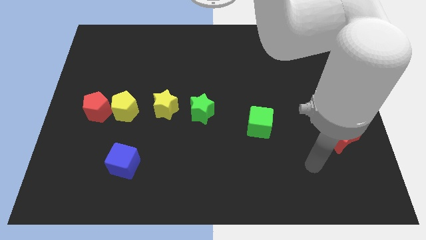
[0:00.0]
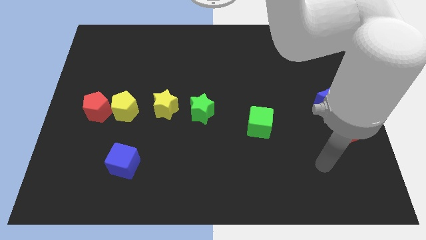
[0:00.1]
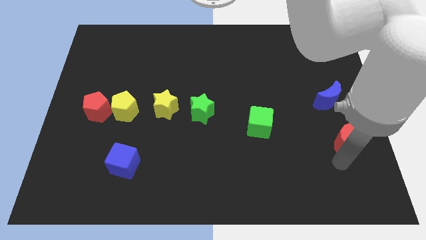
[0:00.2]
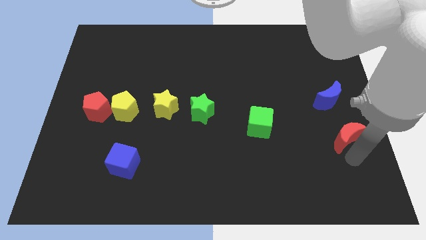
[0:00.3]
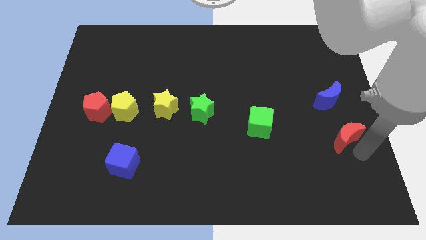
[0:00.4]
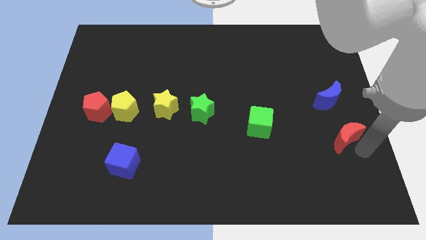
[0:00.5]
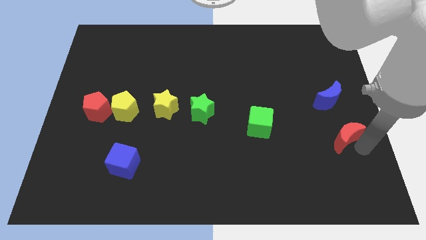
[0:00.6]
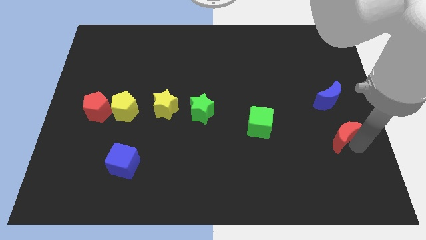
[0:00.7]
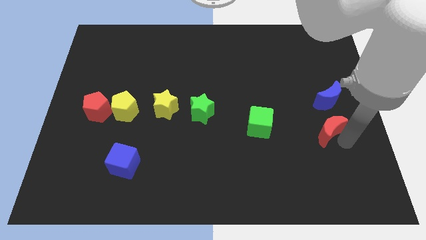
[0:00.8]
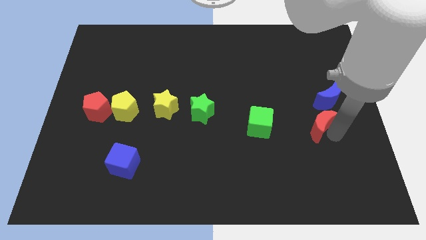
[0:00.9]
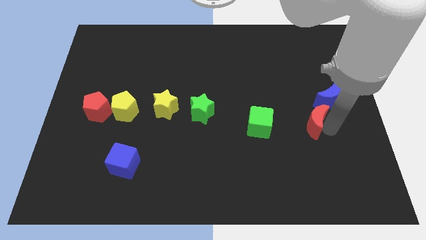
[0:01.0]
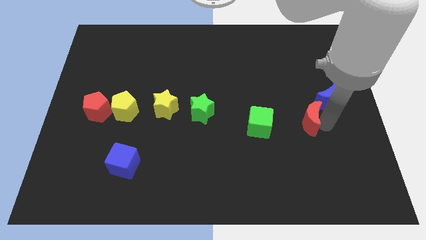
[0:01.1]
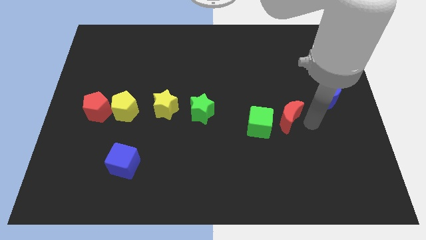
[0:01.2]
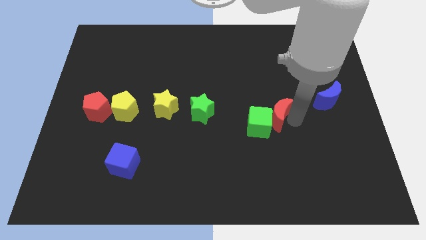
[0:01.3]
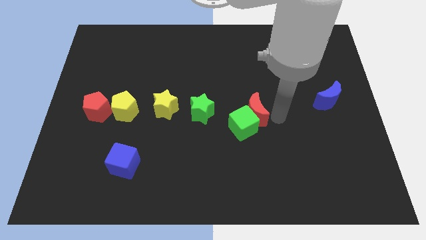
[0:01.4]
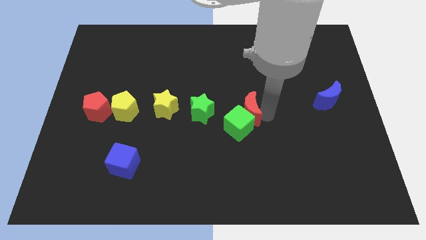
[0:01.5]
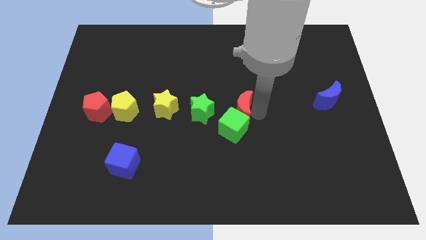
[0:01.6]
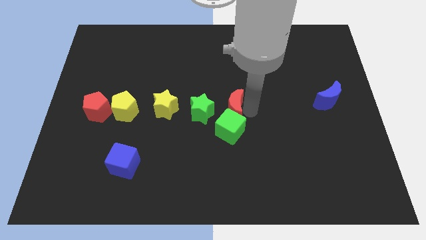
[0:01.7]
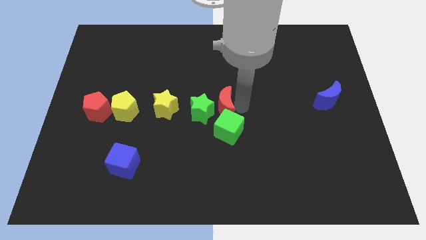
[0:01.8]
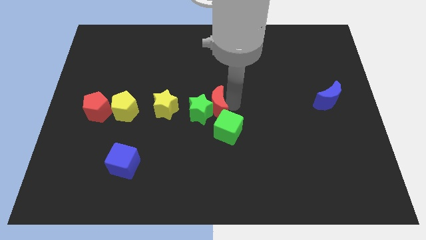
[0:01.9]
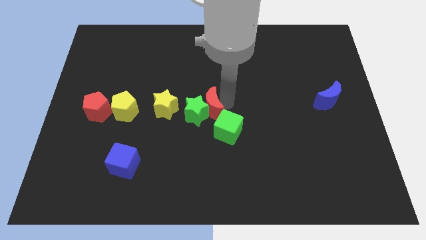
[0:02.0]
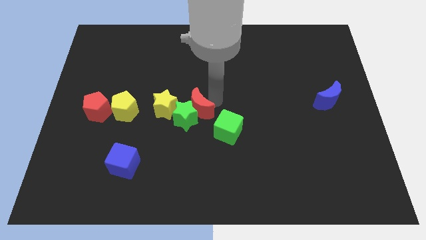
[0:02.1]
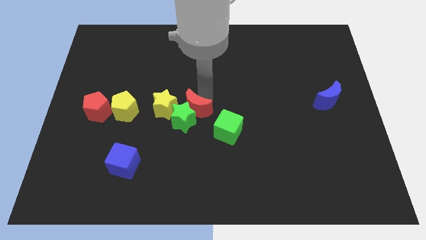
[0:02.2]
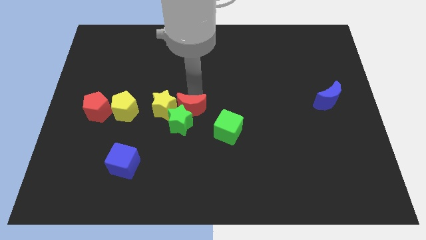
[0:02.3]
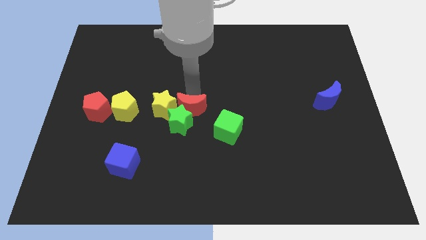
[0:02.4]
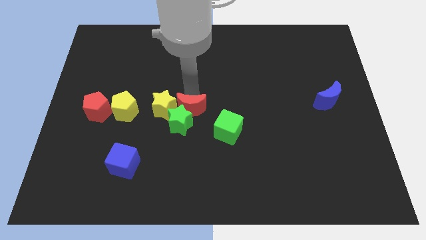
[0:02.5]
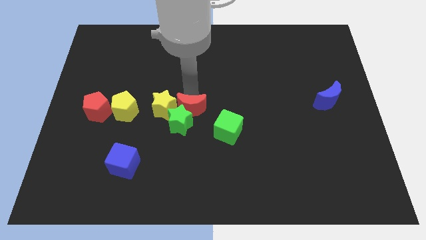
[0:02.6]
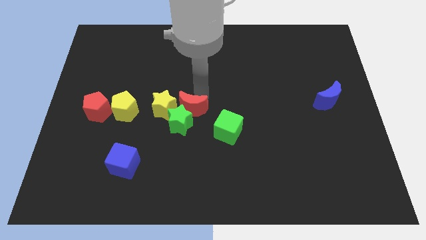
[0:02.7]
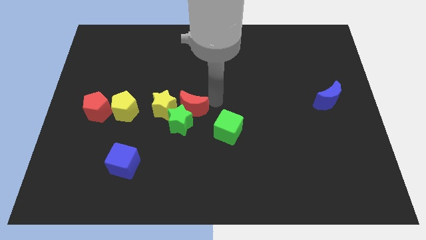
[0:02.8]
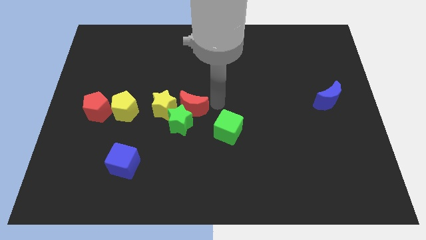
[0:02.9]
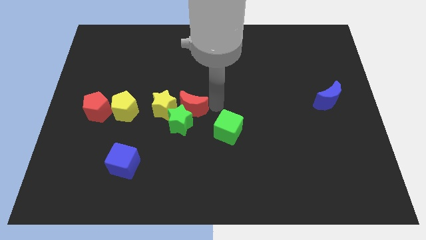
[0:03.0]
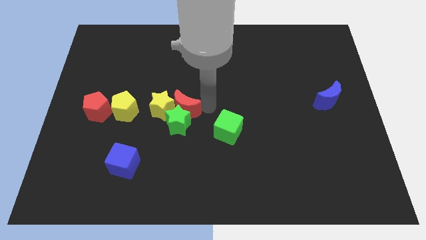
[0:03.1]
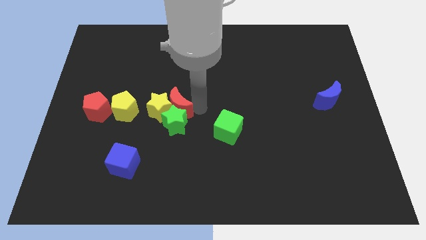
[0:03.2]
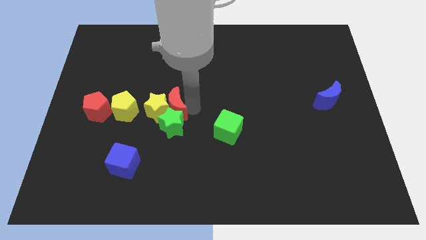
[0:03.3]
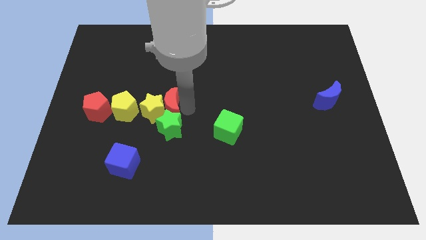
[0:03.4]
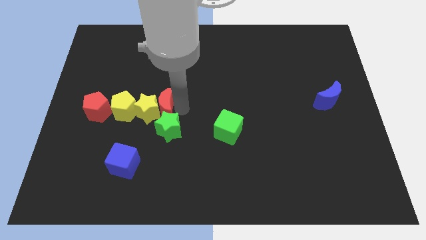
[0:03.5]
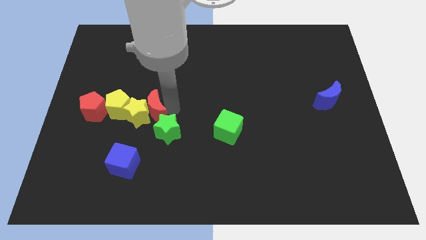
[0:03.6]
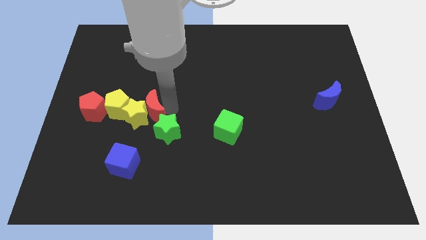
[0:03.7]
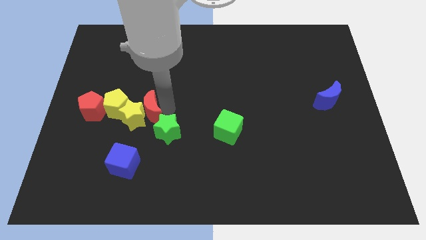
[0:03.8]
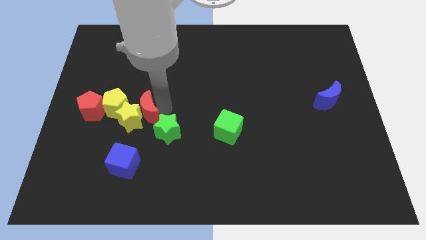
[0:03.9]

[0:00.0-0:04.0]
move the red moon into the yellow blocks and green star

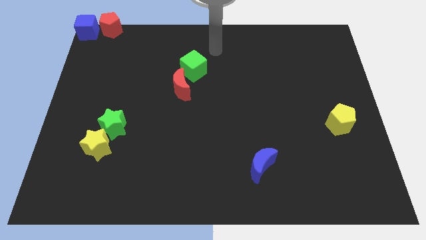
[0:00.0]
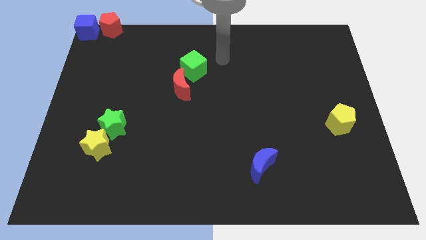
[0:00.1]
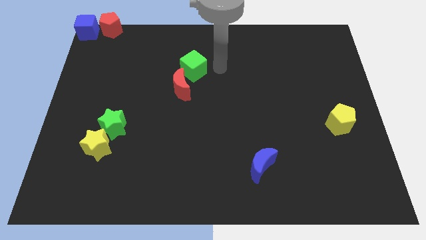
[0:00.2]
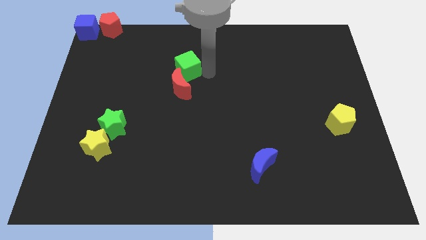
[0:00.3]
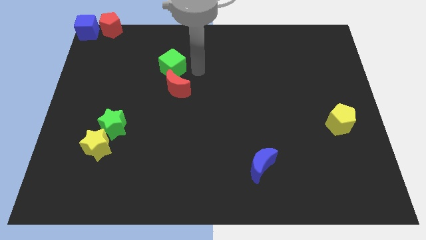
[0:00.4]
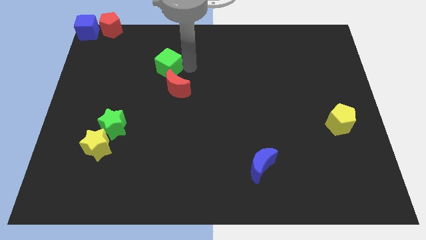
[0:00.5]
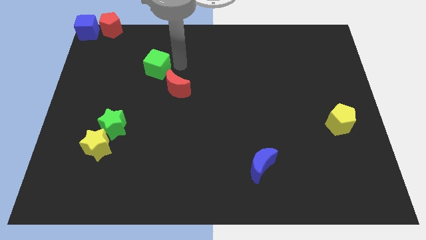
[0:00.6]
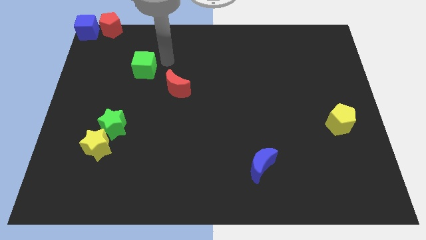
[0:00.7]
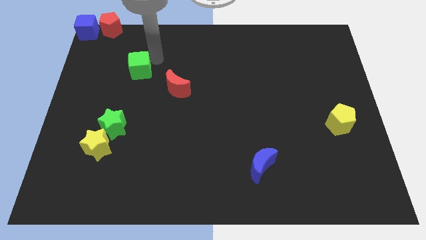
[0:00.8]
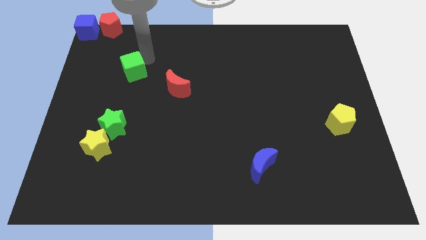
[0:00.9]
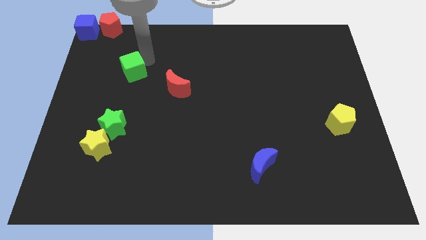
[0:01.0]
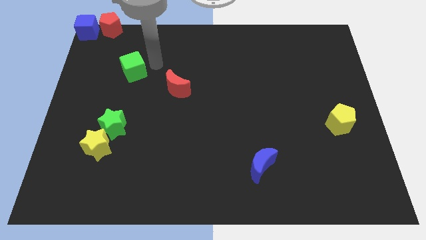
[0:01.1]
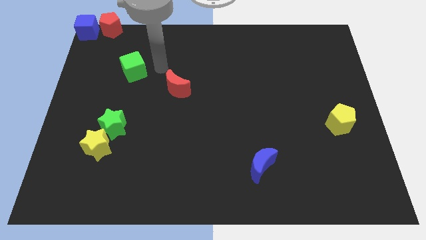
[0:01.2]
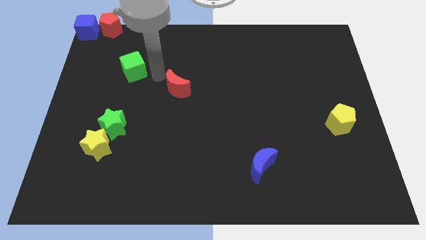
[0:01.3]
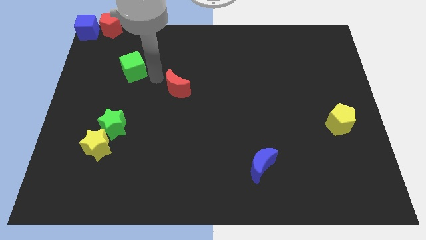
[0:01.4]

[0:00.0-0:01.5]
separate the red crescent and the green cube

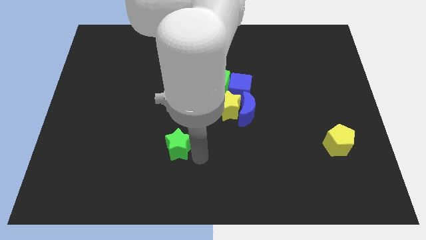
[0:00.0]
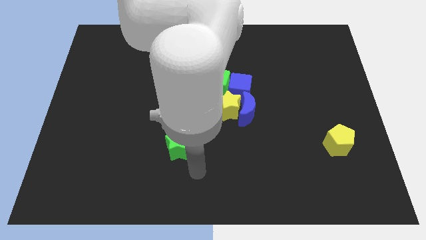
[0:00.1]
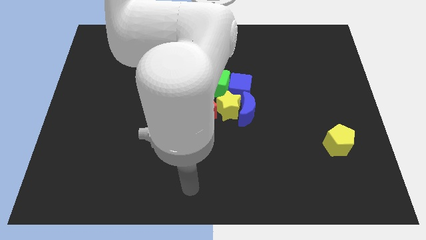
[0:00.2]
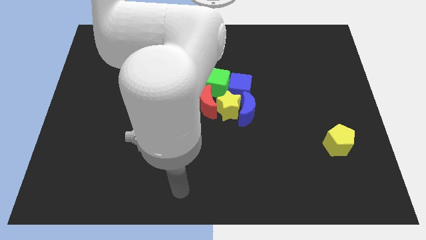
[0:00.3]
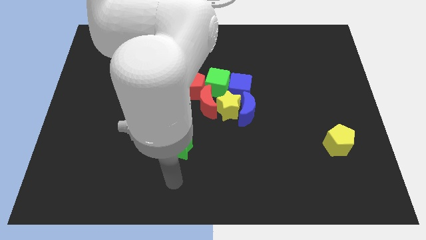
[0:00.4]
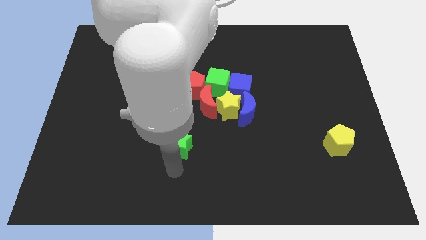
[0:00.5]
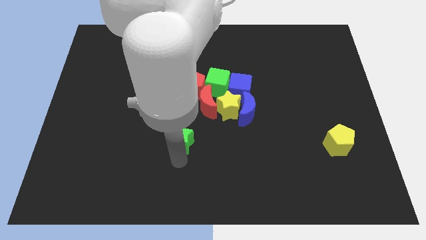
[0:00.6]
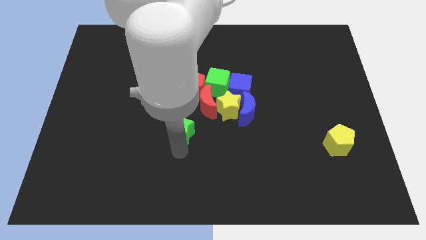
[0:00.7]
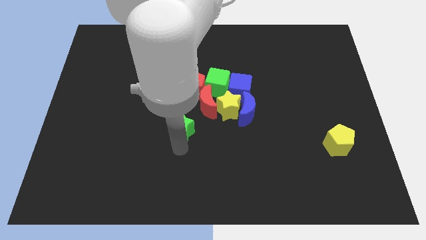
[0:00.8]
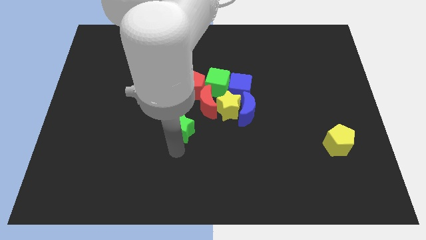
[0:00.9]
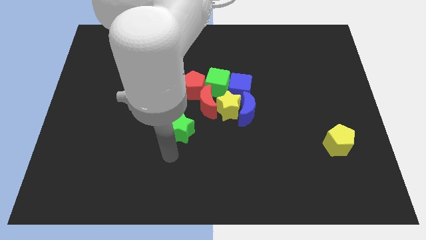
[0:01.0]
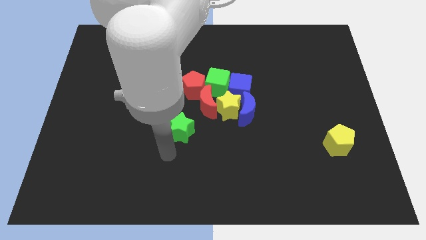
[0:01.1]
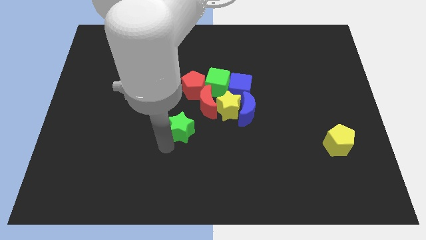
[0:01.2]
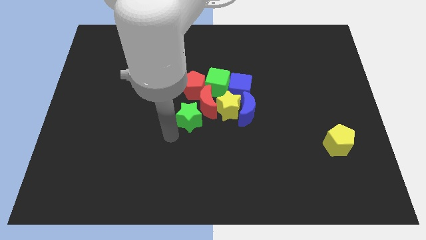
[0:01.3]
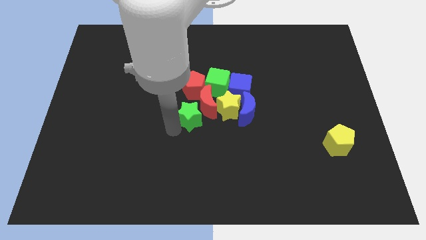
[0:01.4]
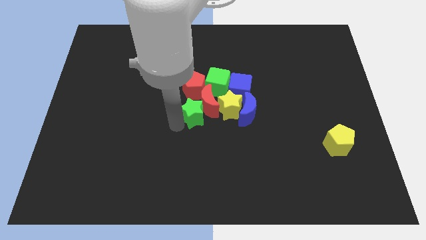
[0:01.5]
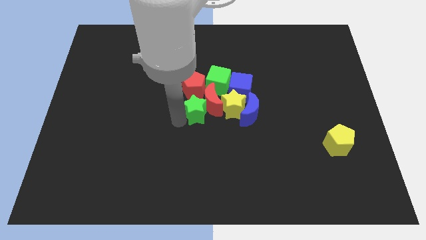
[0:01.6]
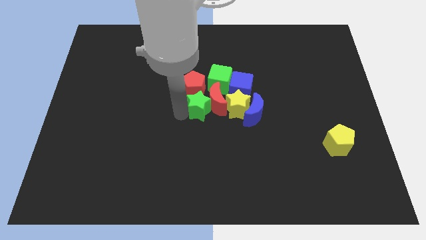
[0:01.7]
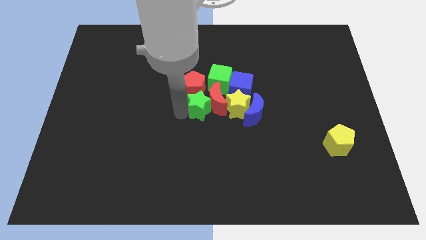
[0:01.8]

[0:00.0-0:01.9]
move green star left beside the red moon

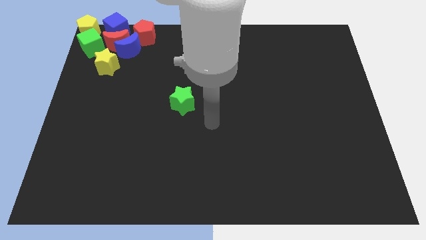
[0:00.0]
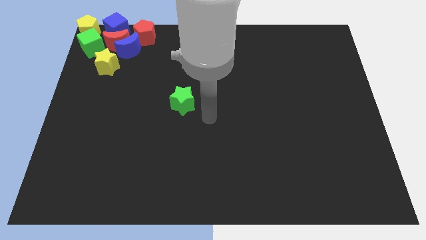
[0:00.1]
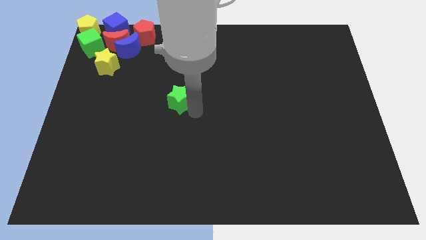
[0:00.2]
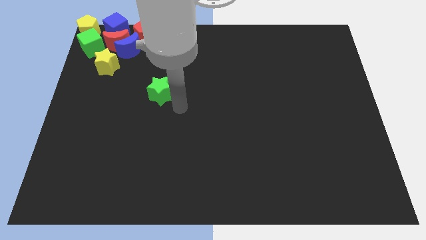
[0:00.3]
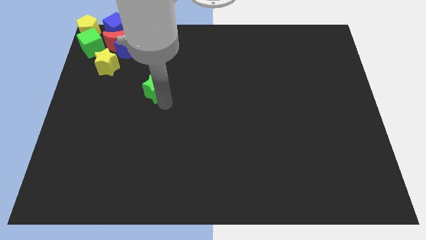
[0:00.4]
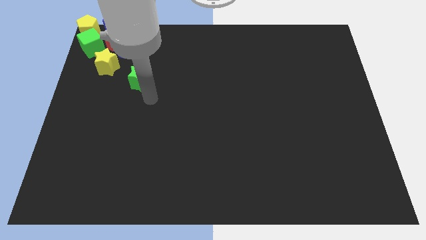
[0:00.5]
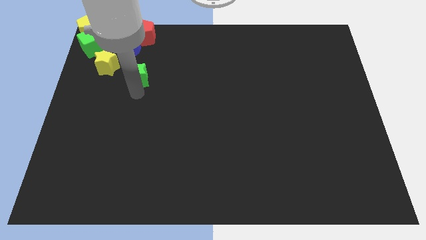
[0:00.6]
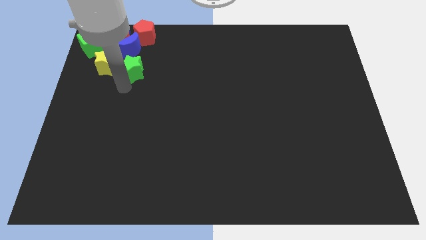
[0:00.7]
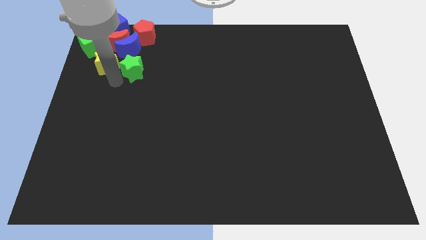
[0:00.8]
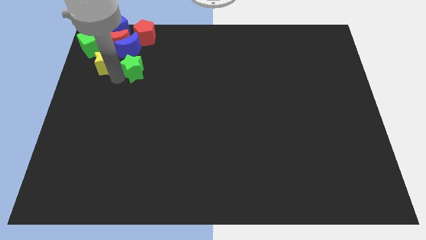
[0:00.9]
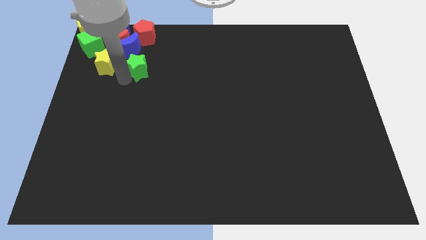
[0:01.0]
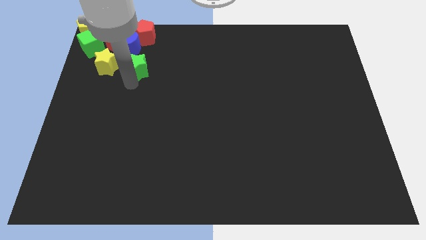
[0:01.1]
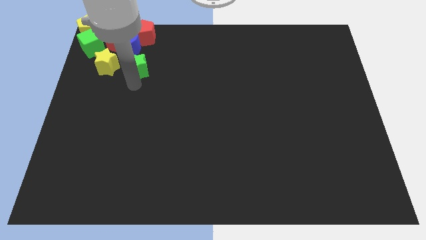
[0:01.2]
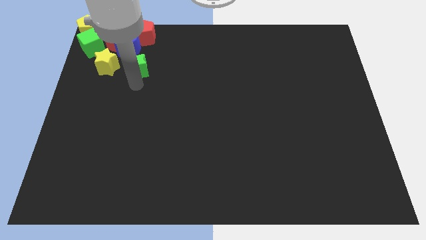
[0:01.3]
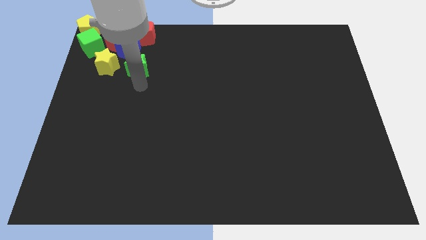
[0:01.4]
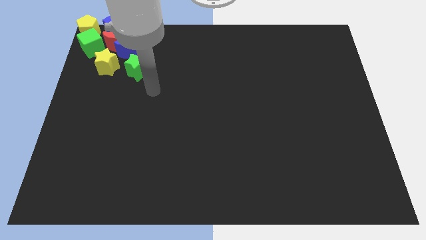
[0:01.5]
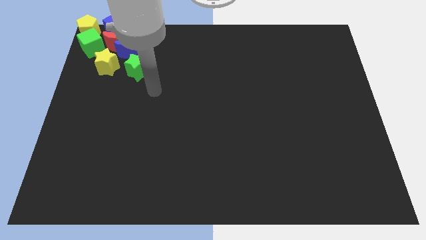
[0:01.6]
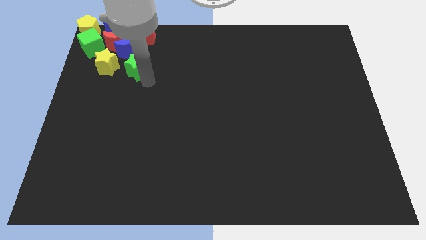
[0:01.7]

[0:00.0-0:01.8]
move green star near the yellow star
